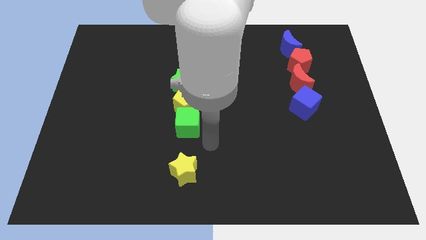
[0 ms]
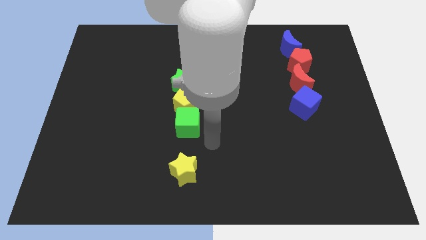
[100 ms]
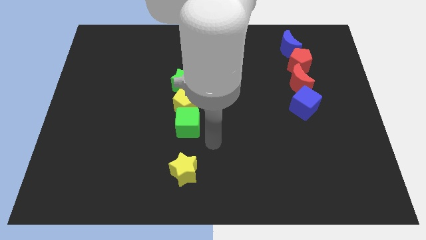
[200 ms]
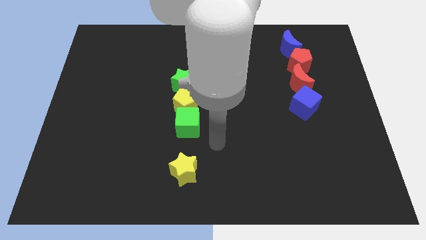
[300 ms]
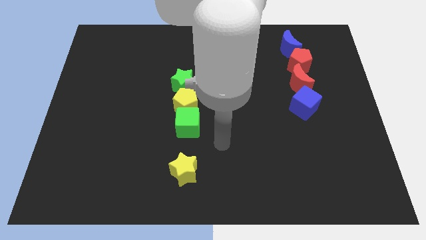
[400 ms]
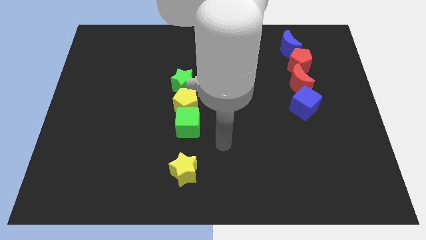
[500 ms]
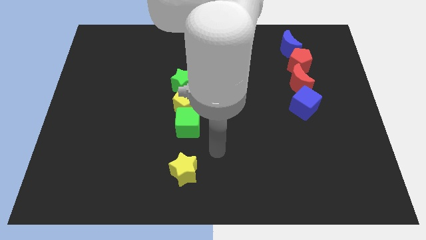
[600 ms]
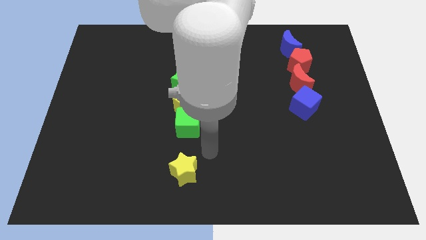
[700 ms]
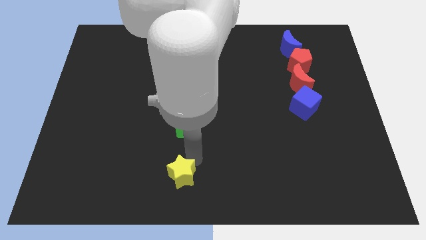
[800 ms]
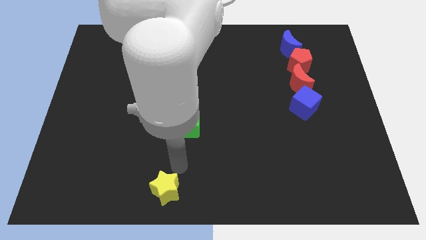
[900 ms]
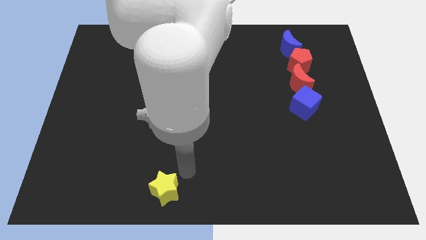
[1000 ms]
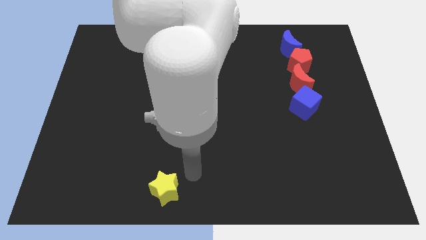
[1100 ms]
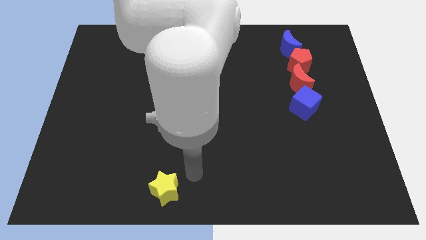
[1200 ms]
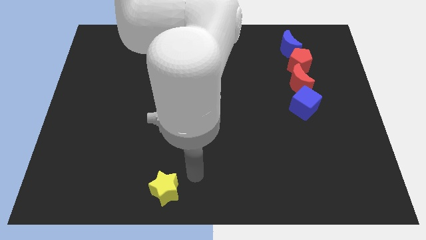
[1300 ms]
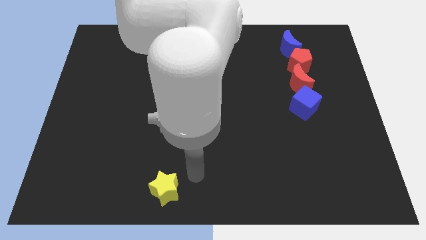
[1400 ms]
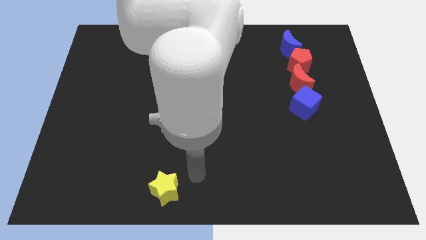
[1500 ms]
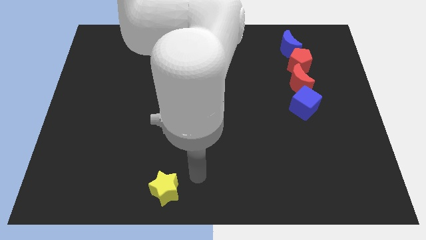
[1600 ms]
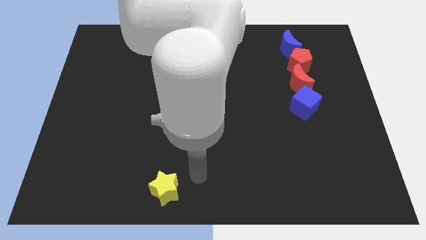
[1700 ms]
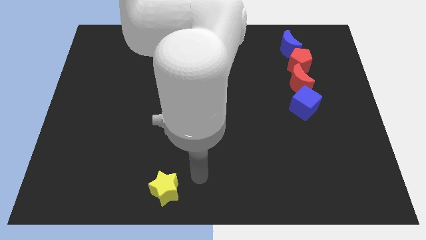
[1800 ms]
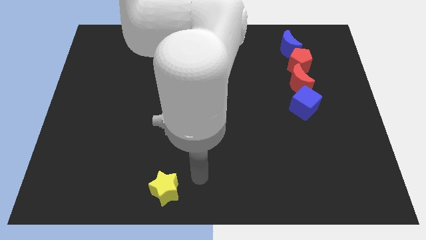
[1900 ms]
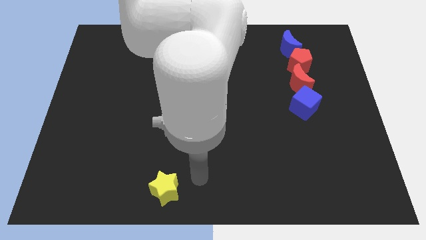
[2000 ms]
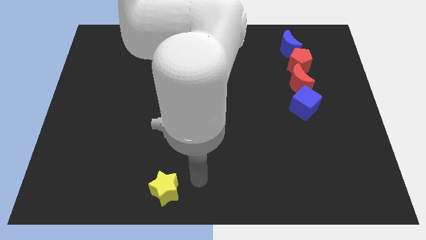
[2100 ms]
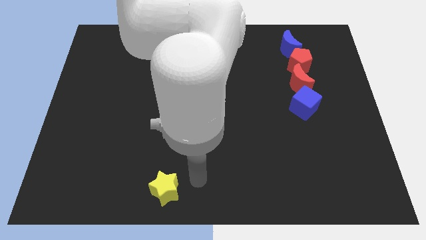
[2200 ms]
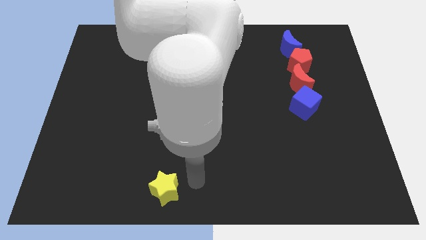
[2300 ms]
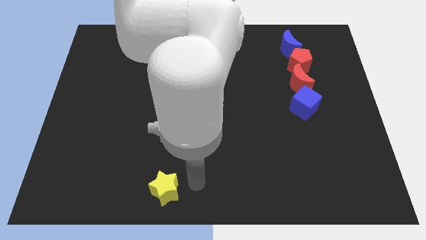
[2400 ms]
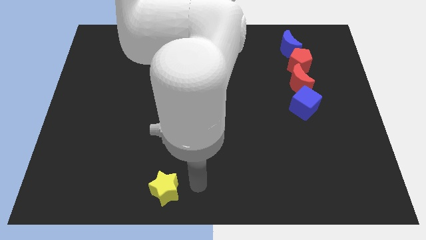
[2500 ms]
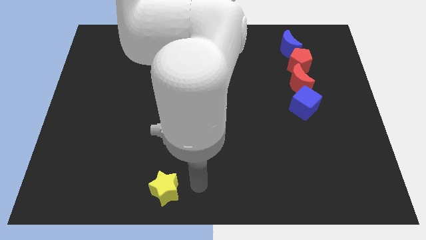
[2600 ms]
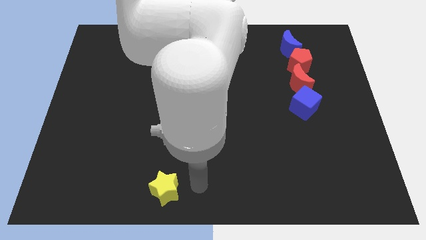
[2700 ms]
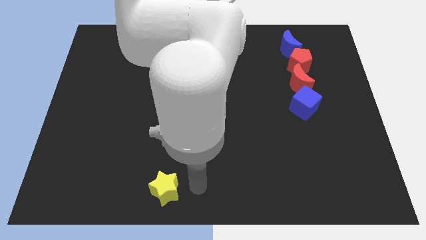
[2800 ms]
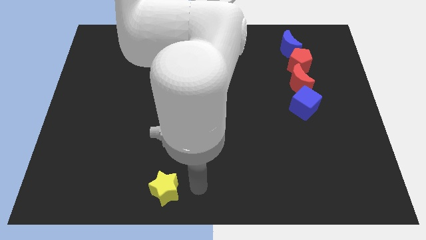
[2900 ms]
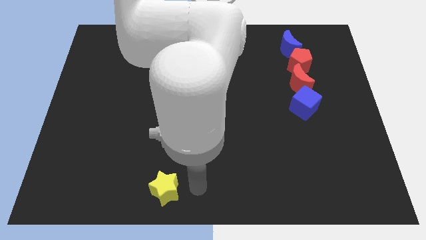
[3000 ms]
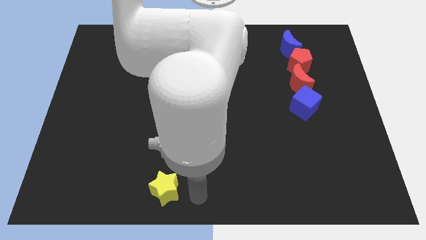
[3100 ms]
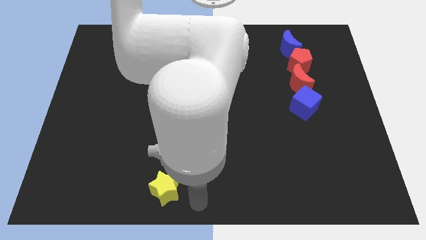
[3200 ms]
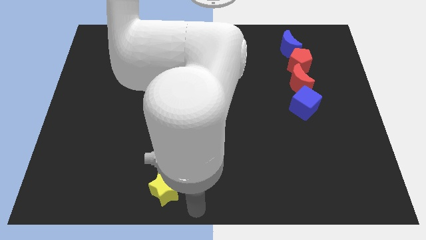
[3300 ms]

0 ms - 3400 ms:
place the yellow star to the bottom center of the board

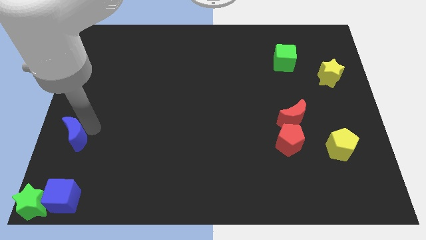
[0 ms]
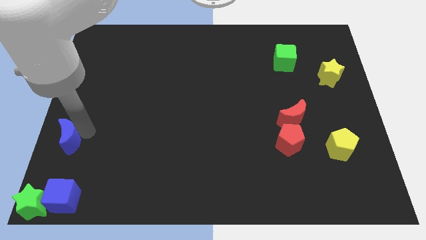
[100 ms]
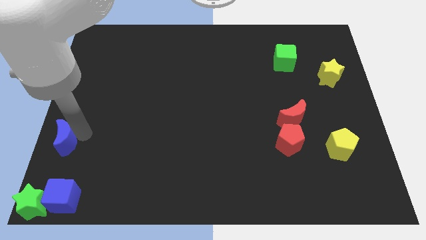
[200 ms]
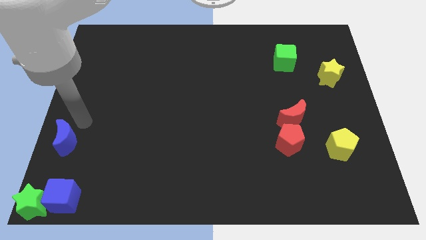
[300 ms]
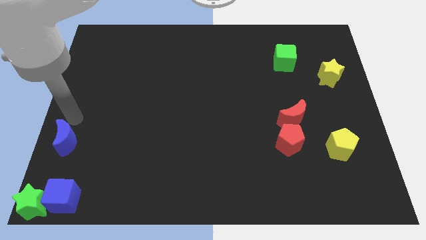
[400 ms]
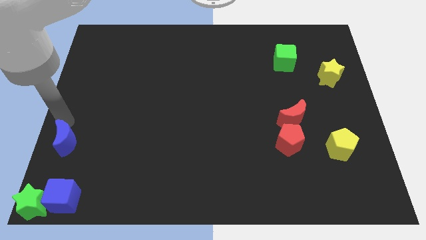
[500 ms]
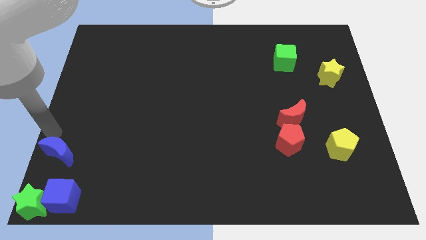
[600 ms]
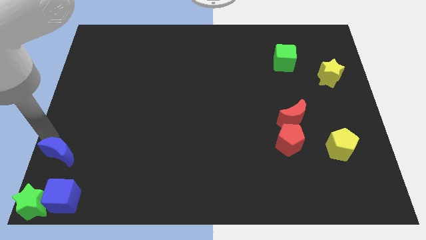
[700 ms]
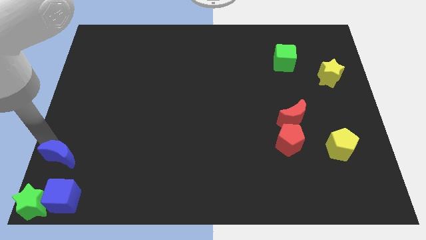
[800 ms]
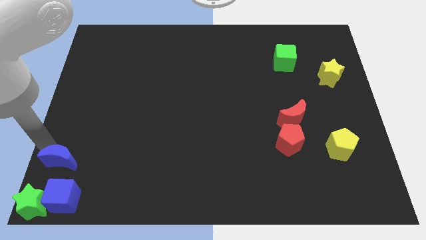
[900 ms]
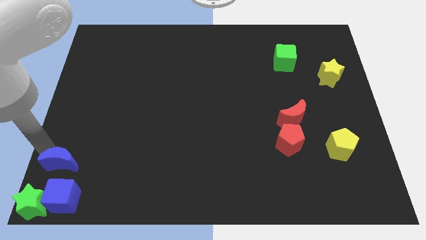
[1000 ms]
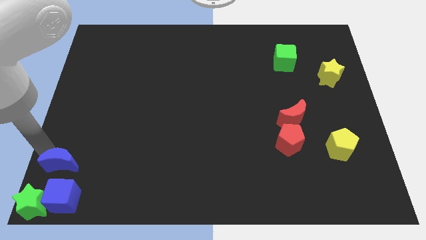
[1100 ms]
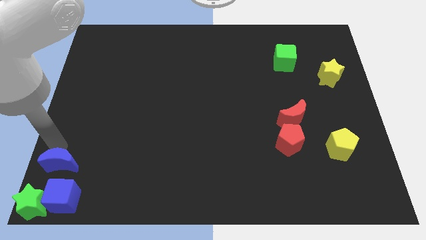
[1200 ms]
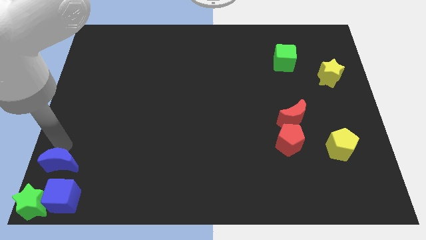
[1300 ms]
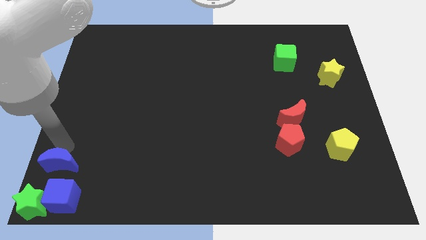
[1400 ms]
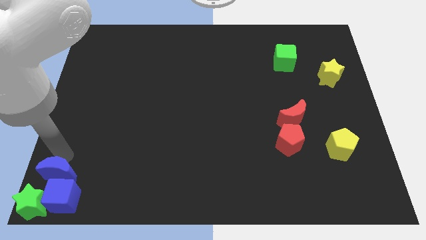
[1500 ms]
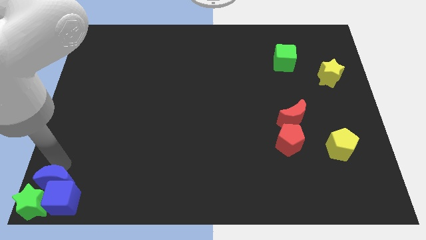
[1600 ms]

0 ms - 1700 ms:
move the blue crescent to the top of the blue cube

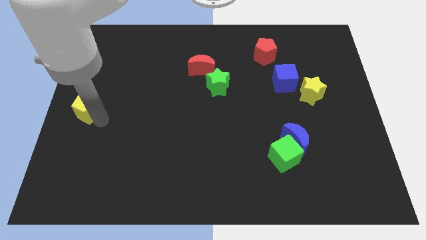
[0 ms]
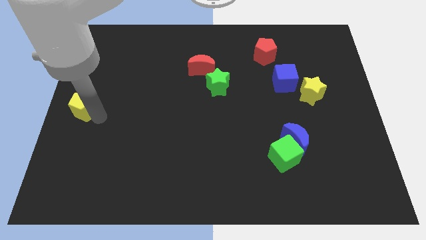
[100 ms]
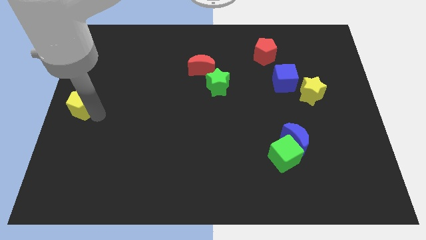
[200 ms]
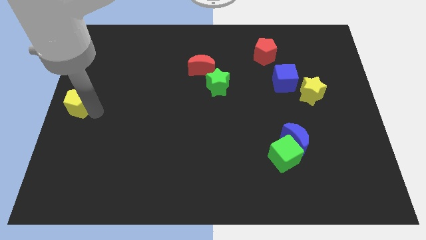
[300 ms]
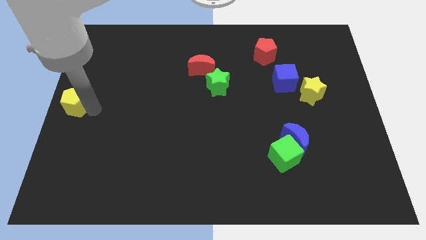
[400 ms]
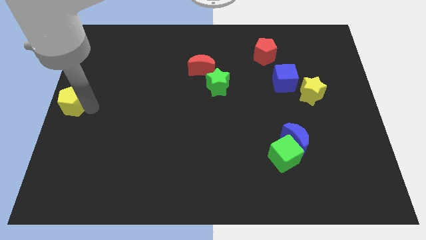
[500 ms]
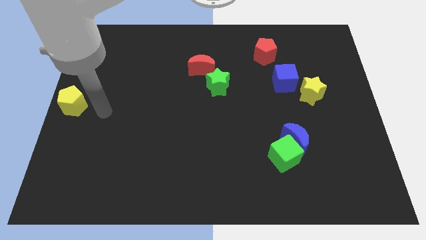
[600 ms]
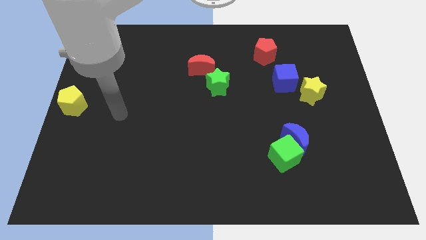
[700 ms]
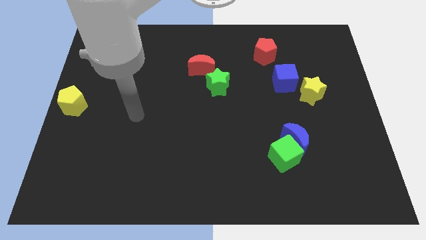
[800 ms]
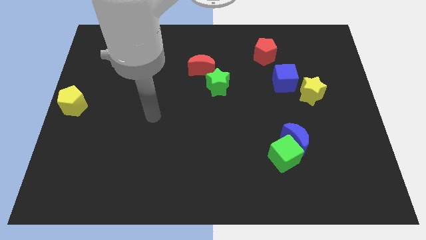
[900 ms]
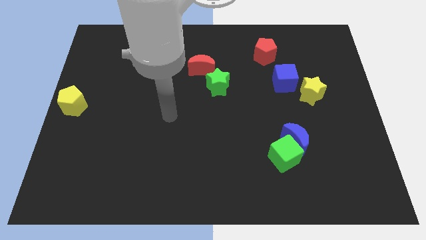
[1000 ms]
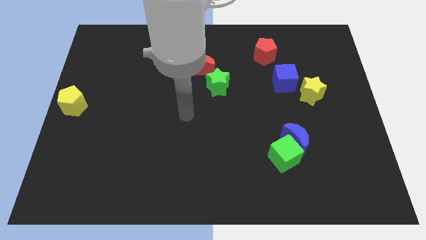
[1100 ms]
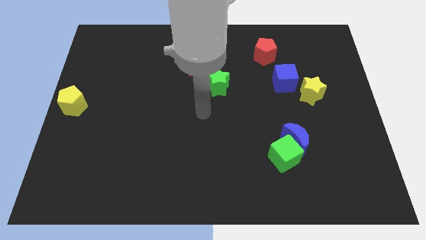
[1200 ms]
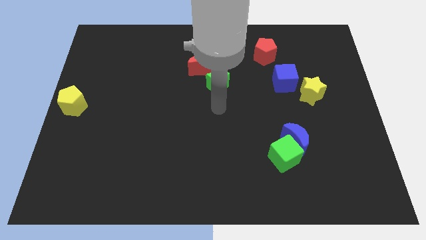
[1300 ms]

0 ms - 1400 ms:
push the yellow pentagon to the center left side

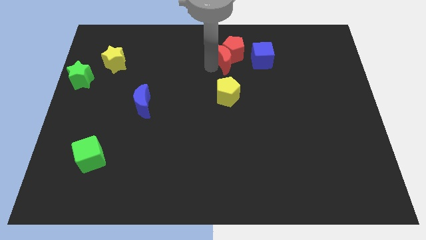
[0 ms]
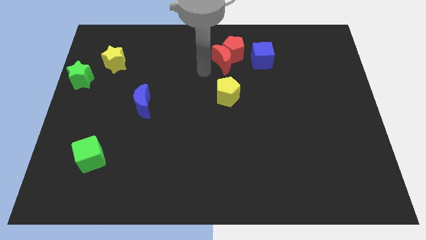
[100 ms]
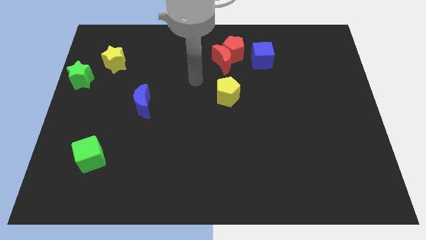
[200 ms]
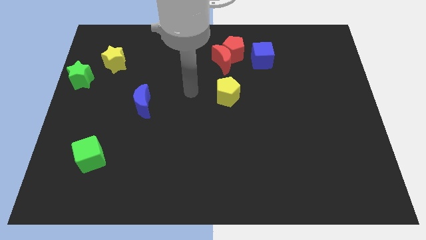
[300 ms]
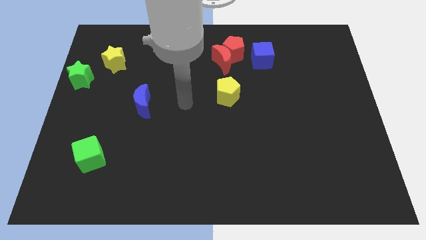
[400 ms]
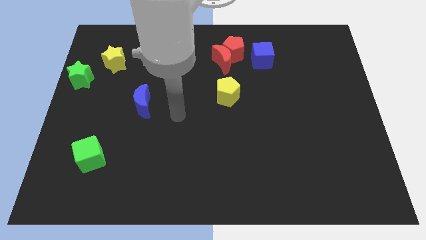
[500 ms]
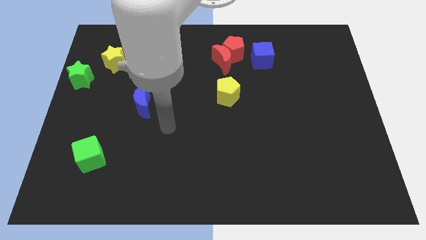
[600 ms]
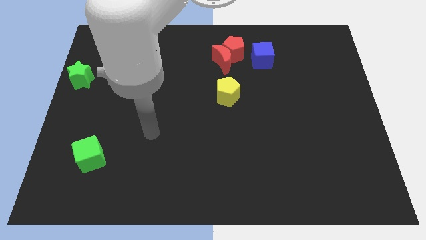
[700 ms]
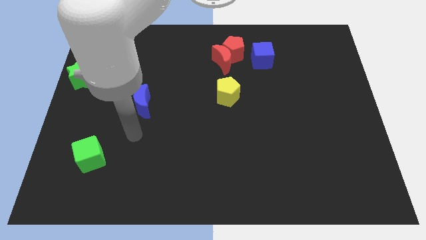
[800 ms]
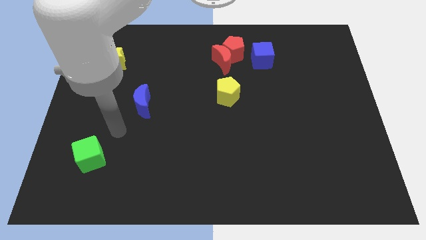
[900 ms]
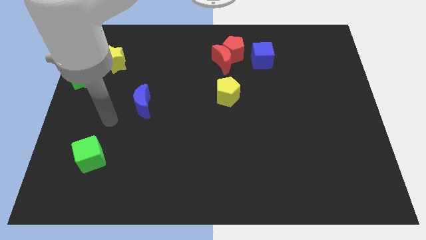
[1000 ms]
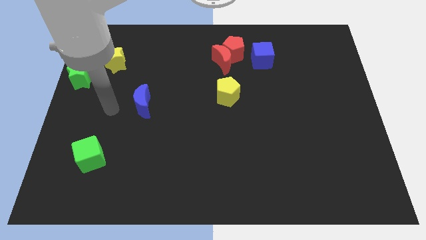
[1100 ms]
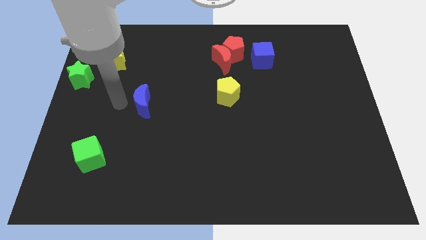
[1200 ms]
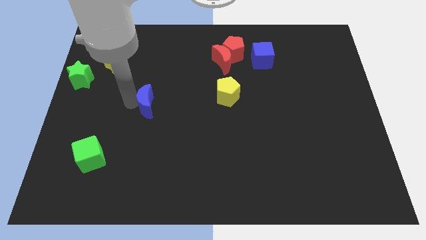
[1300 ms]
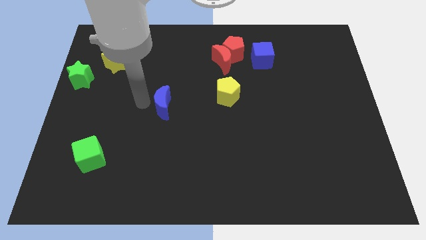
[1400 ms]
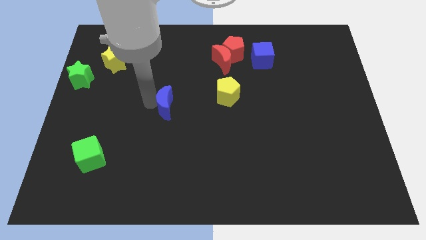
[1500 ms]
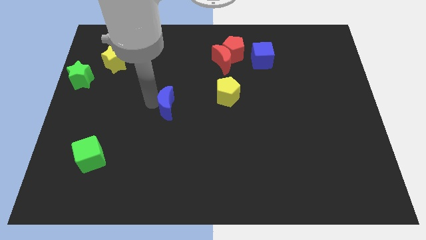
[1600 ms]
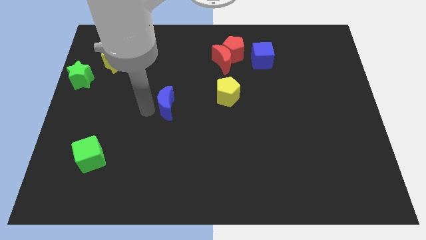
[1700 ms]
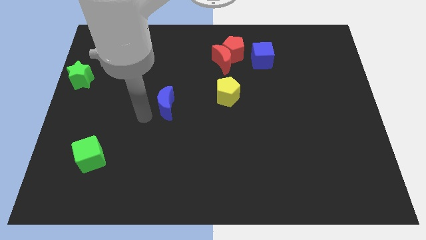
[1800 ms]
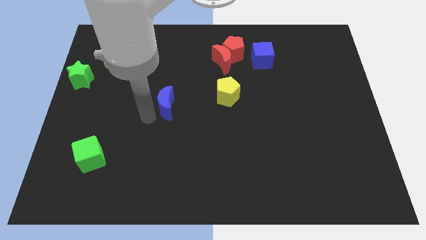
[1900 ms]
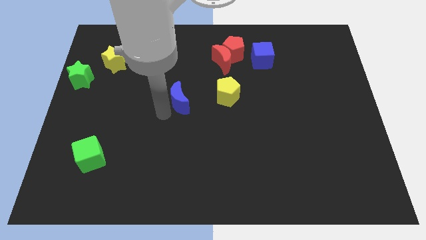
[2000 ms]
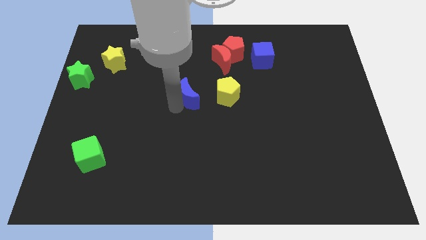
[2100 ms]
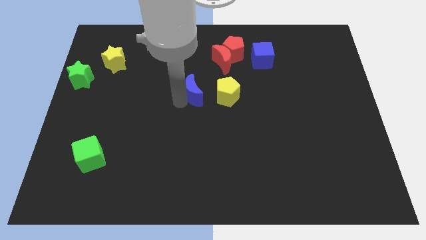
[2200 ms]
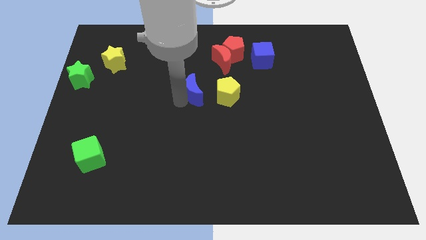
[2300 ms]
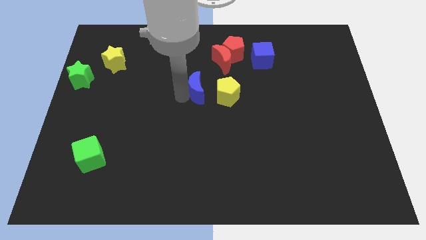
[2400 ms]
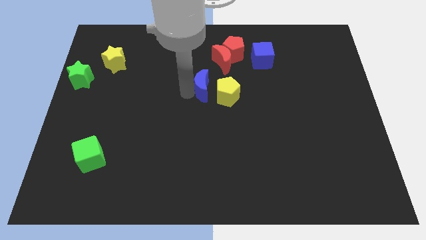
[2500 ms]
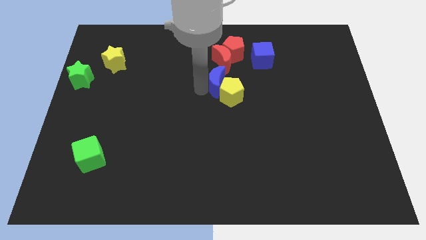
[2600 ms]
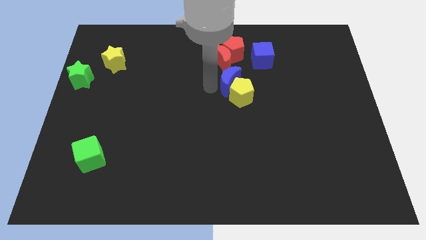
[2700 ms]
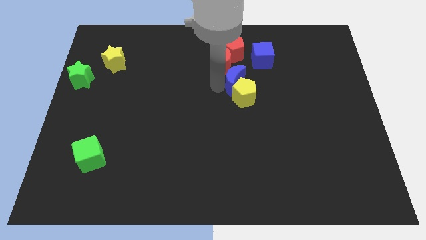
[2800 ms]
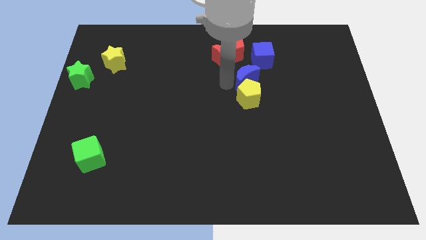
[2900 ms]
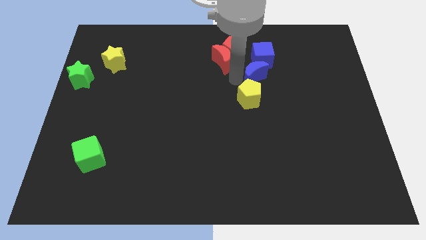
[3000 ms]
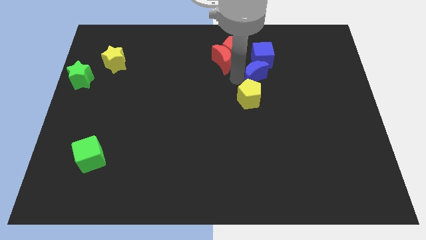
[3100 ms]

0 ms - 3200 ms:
push the blue crescent bottom to the blue cube
